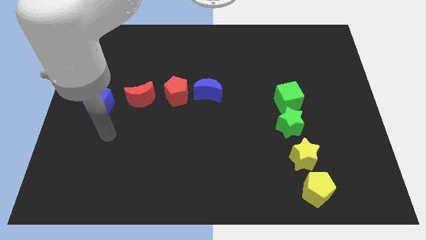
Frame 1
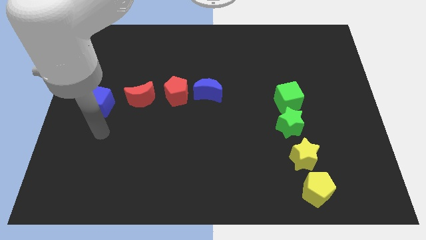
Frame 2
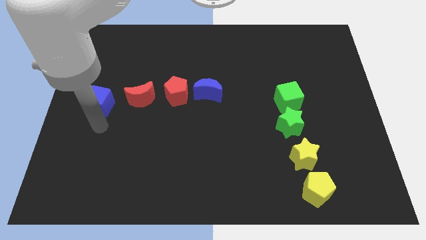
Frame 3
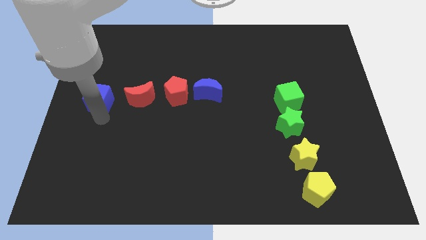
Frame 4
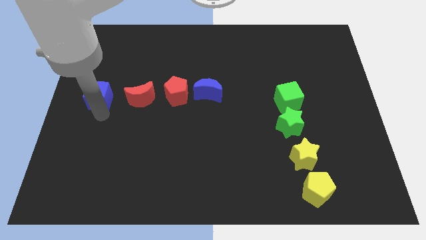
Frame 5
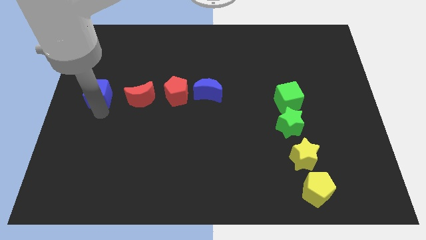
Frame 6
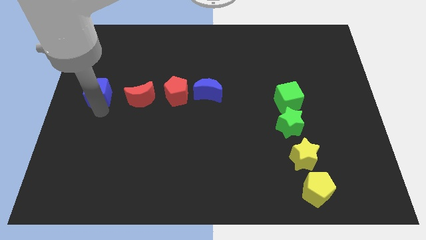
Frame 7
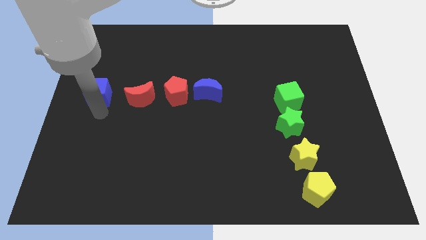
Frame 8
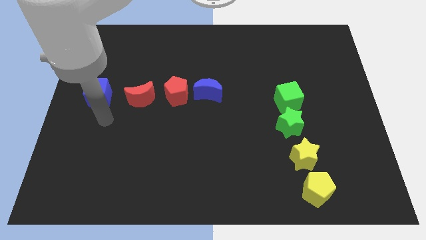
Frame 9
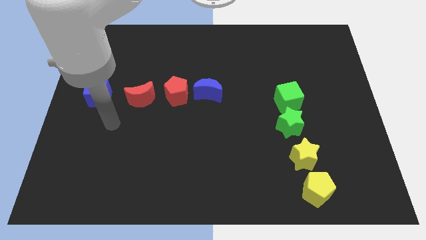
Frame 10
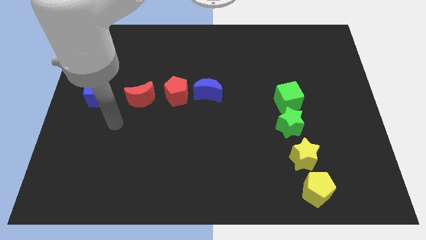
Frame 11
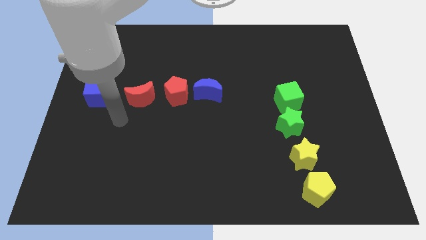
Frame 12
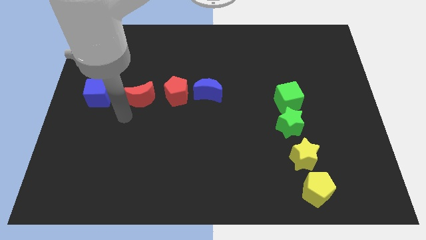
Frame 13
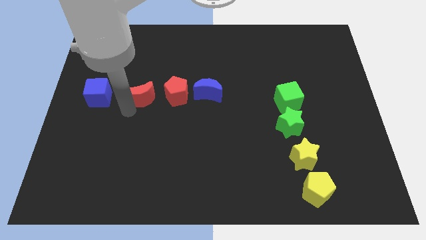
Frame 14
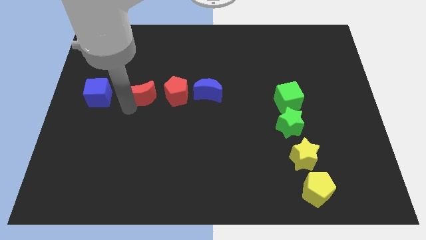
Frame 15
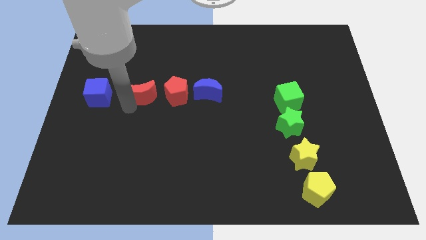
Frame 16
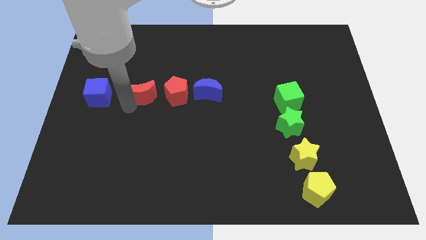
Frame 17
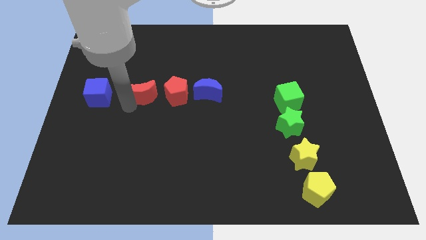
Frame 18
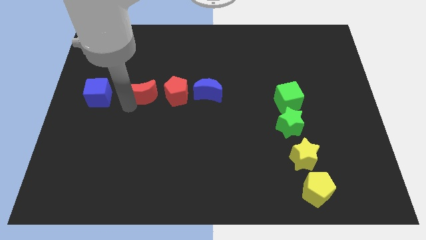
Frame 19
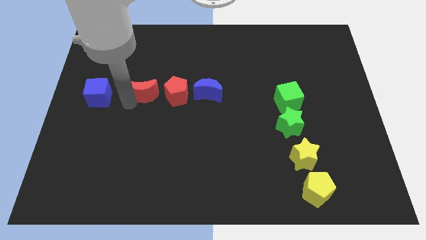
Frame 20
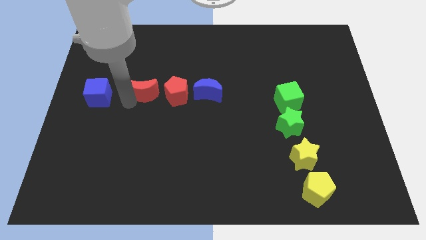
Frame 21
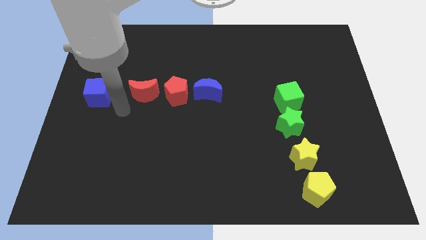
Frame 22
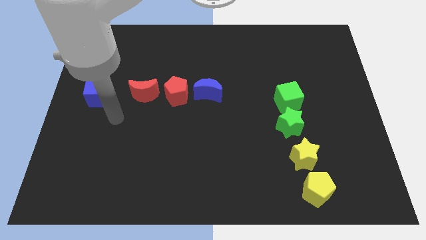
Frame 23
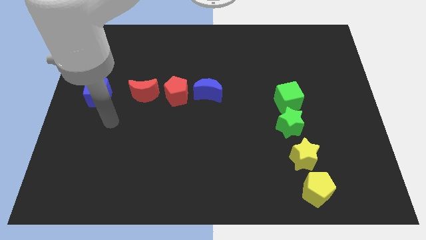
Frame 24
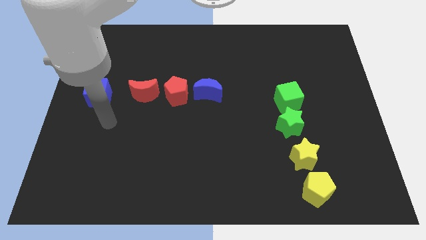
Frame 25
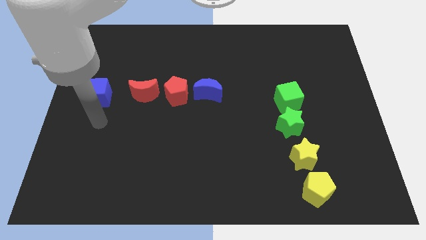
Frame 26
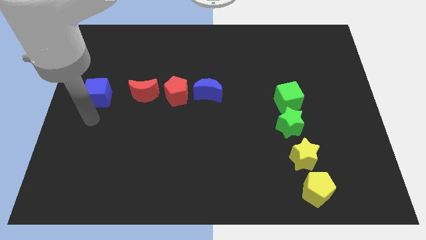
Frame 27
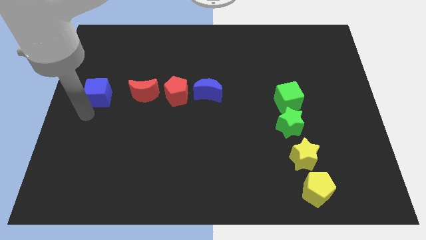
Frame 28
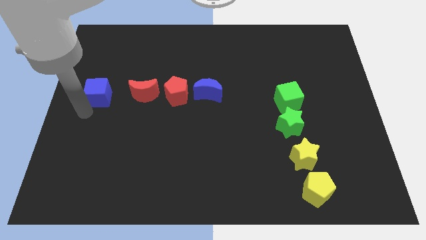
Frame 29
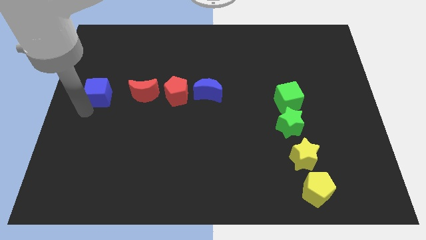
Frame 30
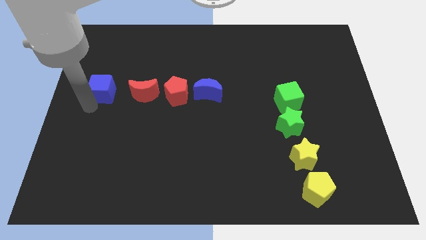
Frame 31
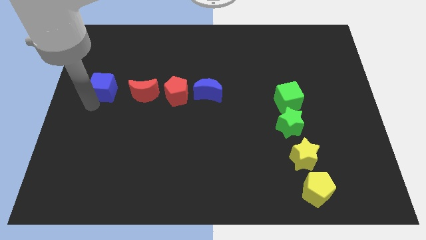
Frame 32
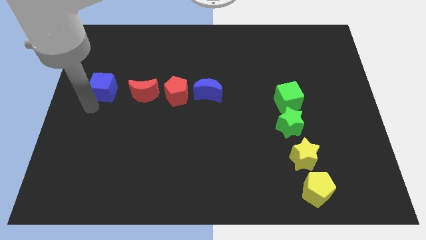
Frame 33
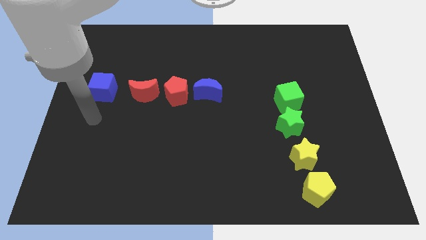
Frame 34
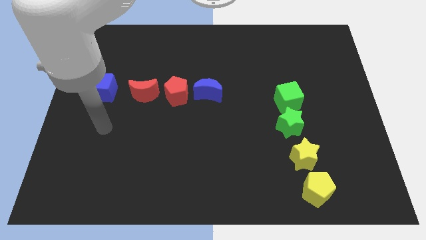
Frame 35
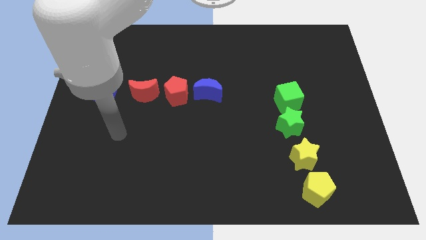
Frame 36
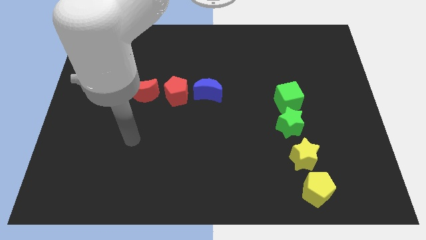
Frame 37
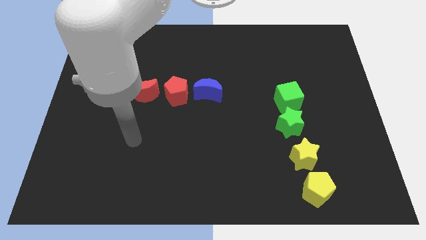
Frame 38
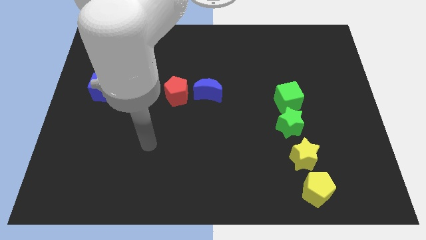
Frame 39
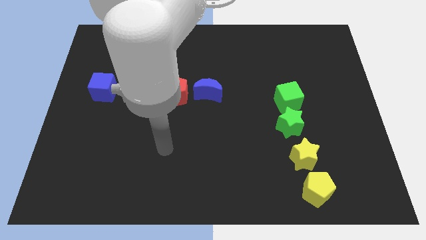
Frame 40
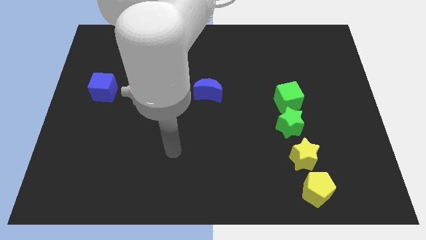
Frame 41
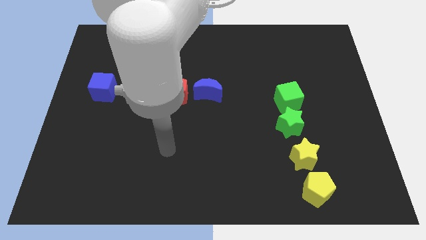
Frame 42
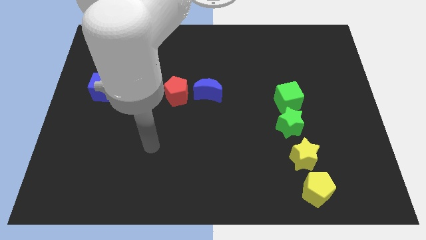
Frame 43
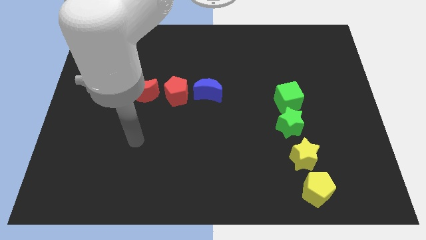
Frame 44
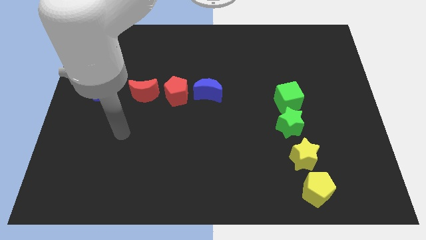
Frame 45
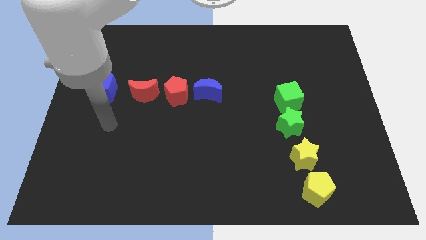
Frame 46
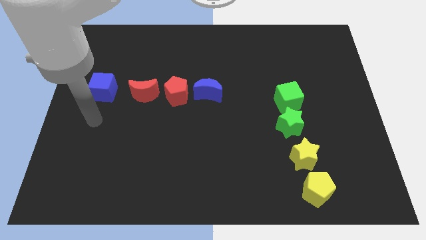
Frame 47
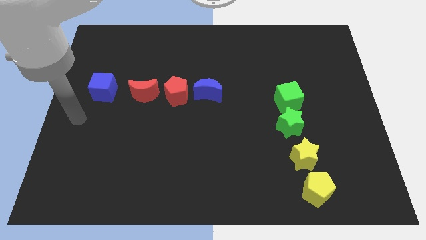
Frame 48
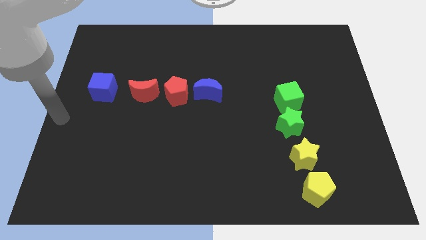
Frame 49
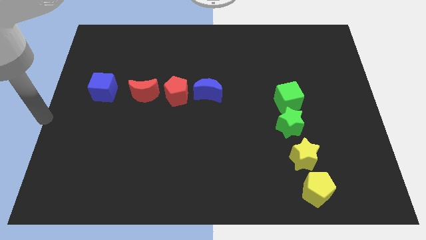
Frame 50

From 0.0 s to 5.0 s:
push the blue cube and red moon upwards slightly together

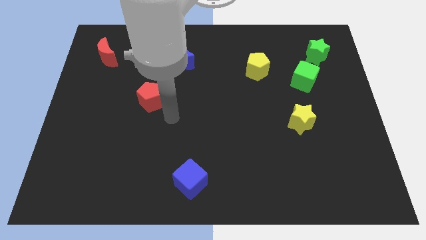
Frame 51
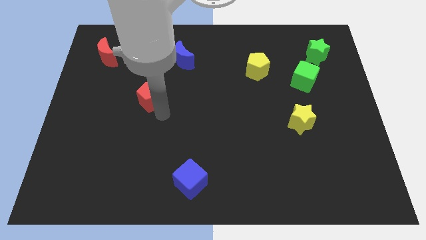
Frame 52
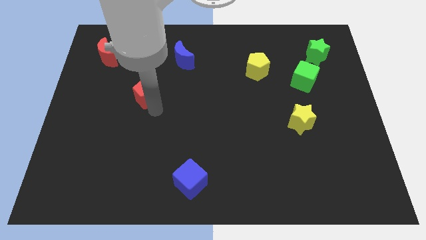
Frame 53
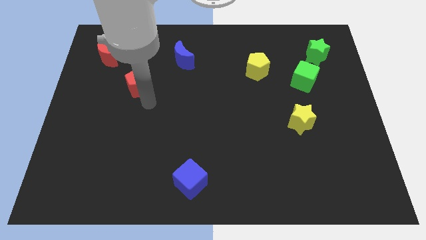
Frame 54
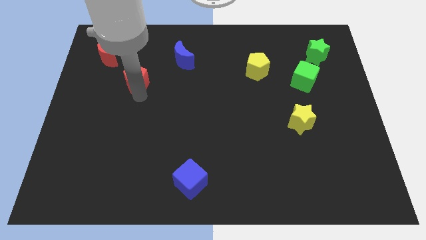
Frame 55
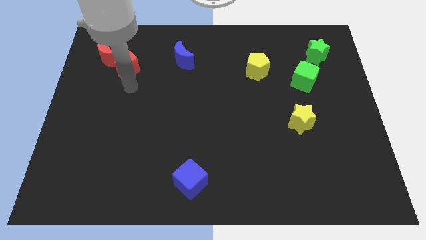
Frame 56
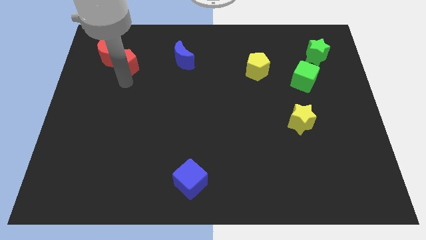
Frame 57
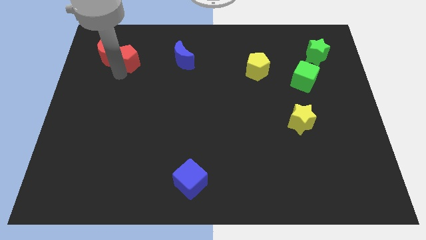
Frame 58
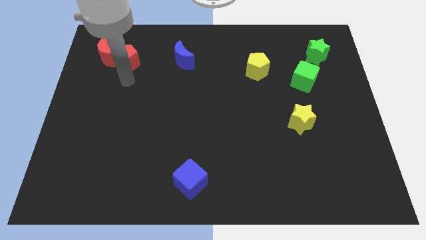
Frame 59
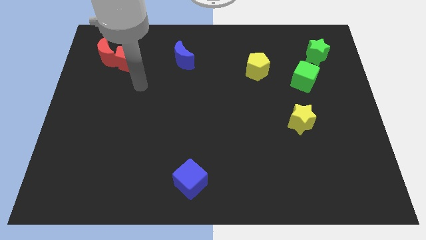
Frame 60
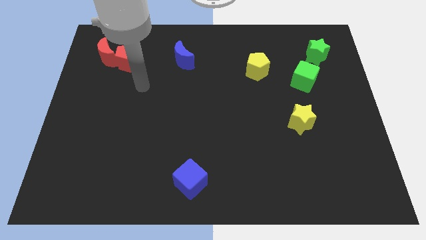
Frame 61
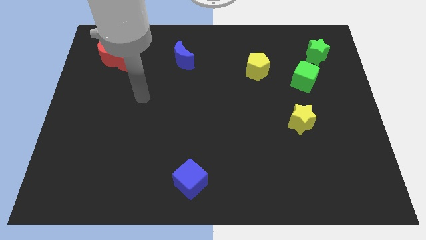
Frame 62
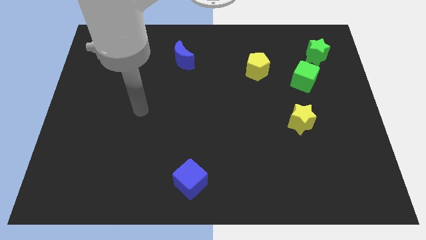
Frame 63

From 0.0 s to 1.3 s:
push the red pentagon towards the top left red crescent

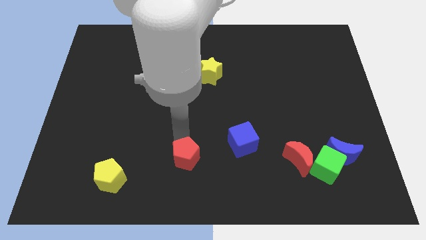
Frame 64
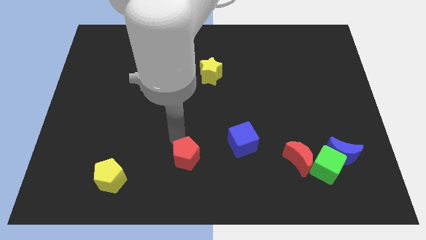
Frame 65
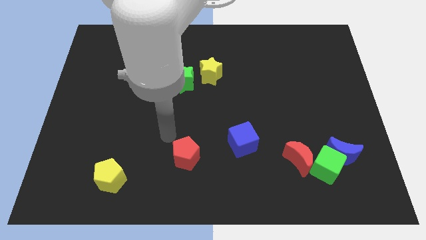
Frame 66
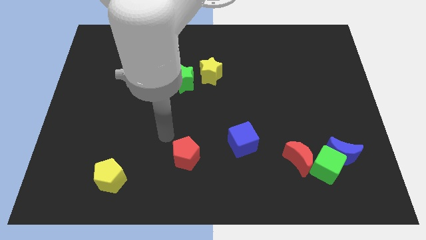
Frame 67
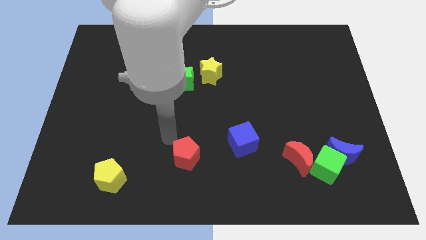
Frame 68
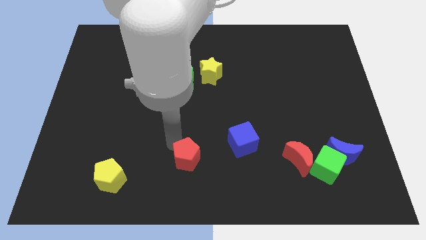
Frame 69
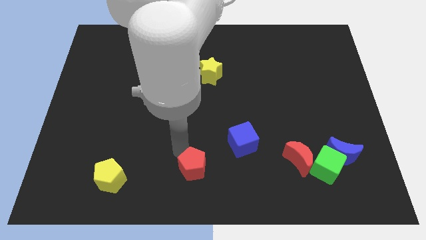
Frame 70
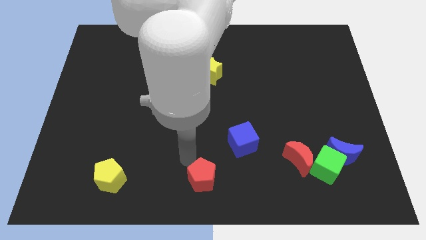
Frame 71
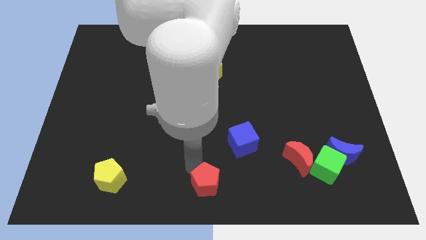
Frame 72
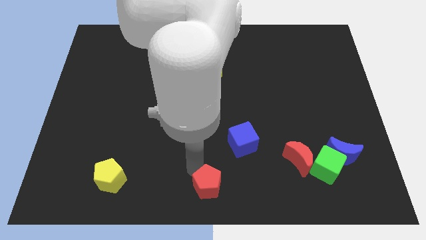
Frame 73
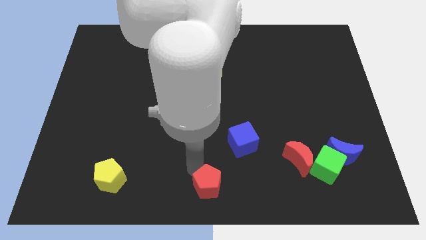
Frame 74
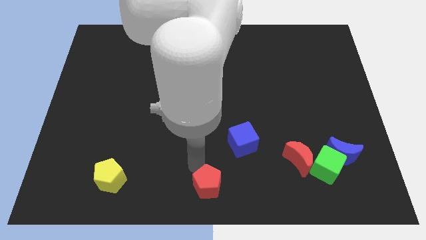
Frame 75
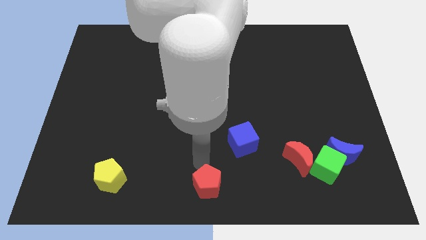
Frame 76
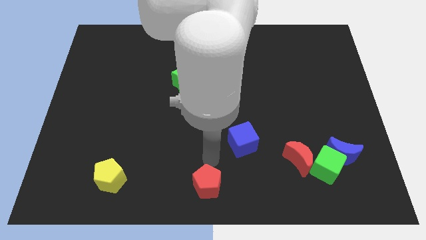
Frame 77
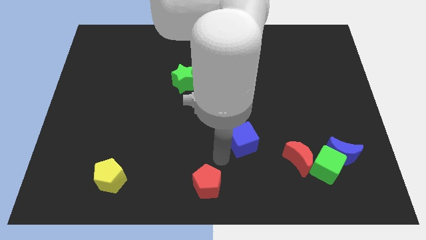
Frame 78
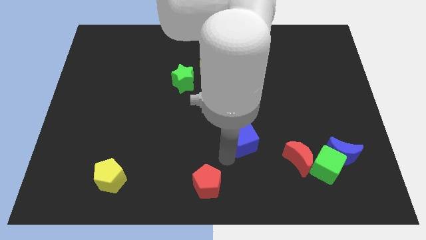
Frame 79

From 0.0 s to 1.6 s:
push the red pentagon towards bottom center

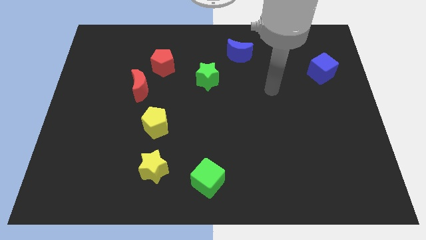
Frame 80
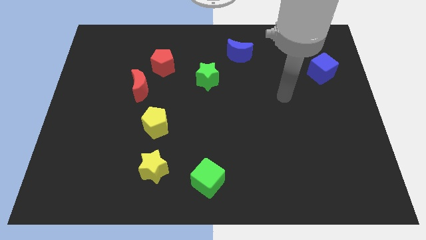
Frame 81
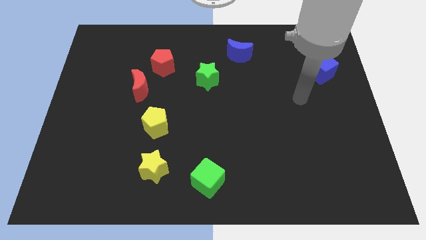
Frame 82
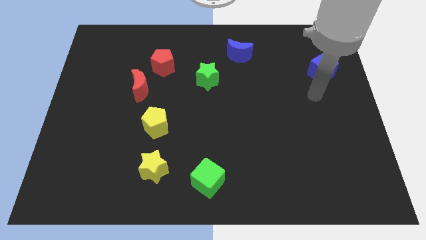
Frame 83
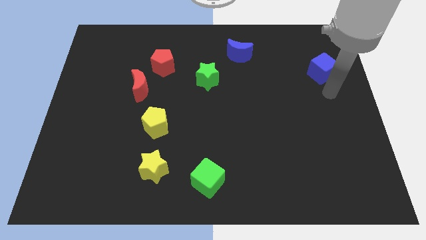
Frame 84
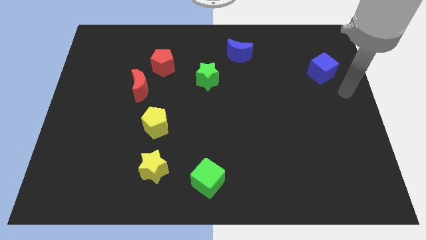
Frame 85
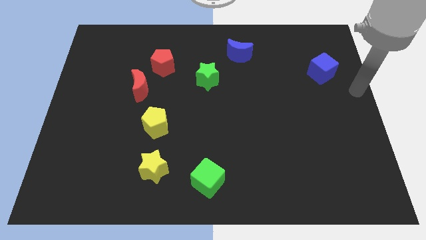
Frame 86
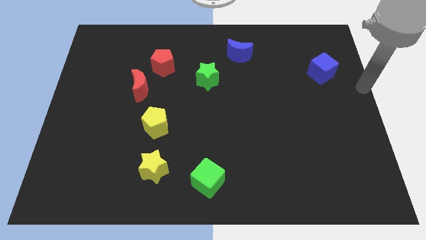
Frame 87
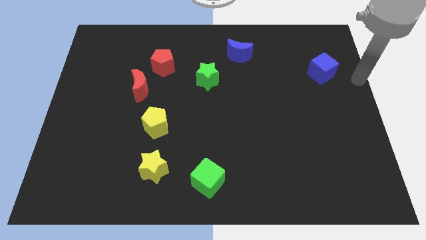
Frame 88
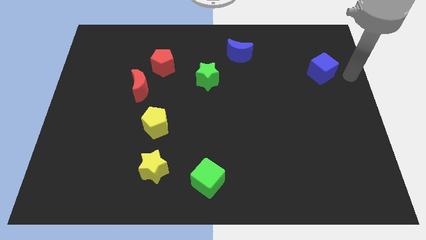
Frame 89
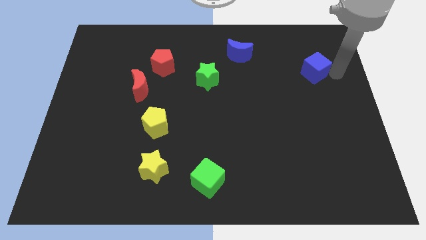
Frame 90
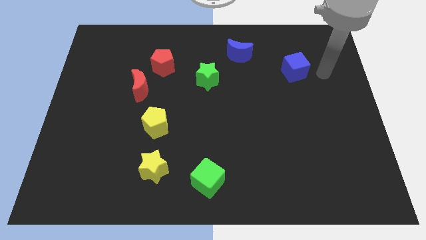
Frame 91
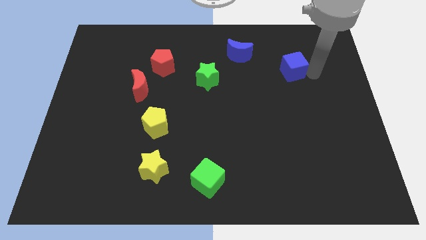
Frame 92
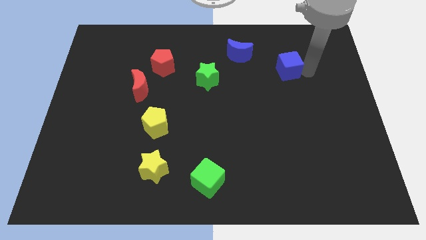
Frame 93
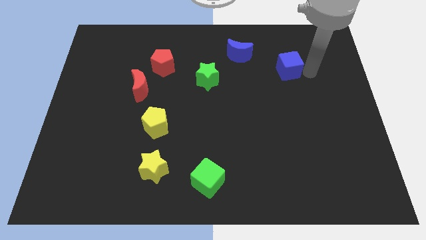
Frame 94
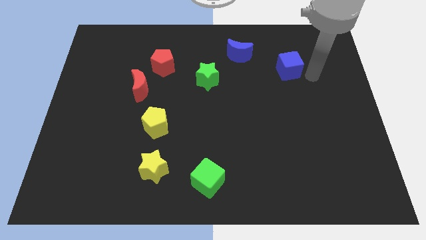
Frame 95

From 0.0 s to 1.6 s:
push the blue cube slightly to the left side of the board
